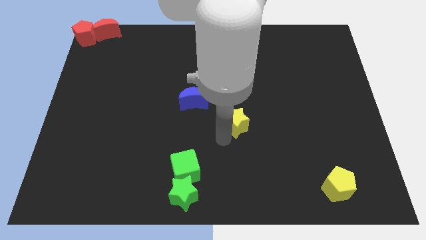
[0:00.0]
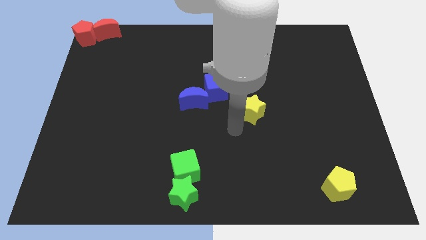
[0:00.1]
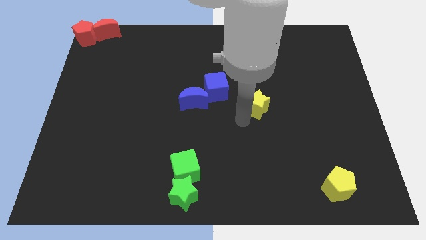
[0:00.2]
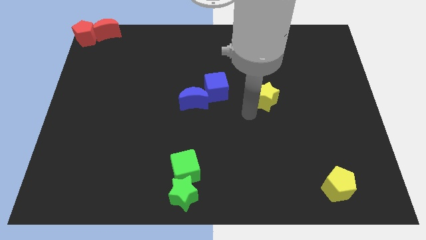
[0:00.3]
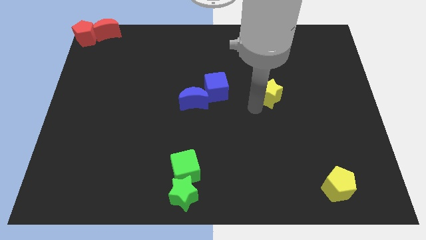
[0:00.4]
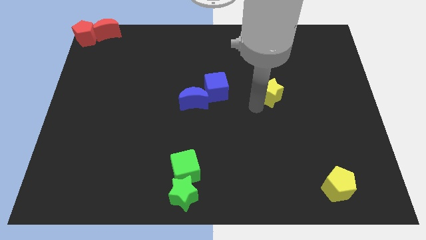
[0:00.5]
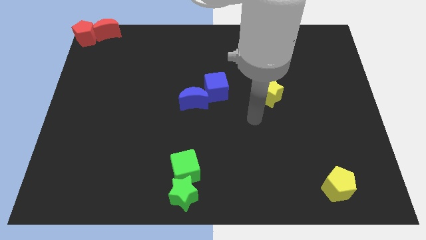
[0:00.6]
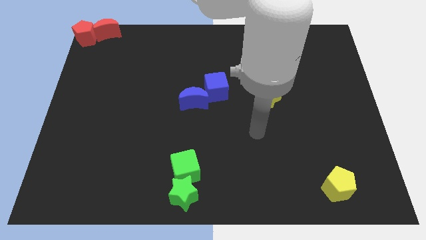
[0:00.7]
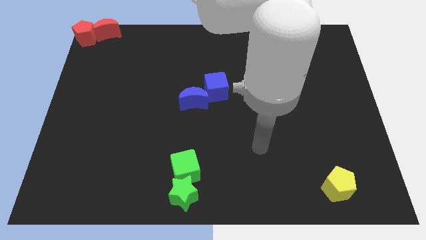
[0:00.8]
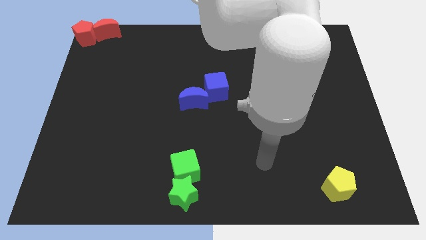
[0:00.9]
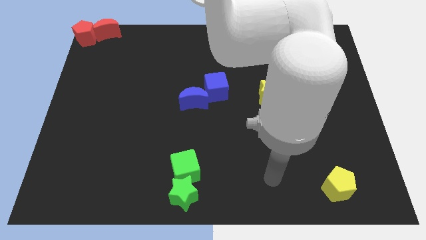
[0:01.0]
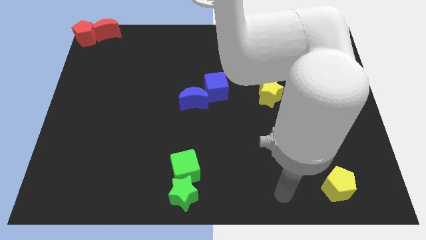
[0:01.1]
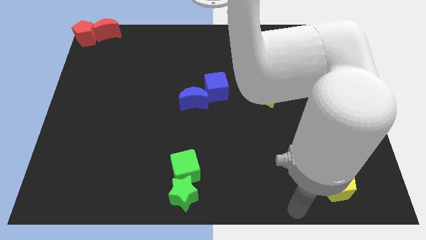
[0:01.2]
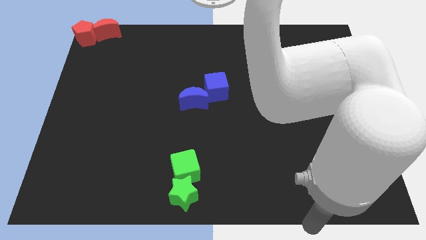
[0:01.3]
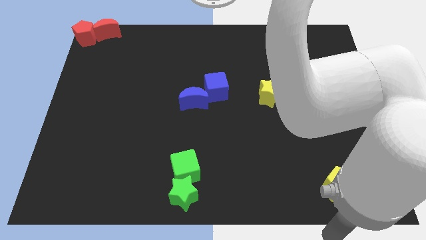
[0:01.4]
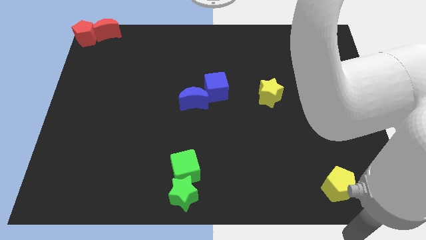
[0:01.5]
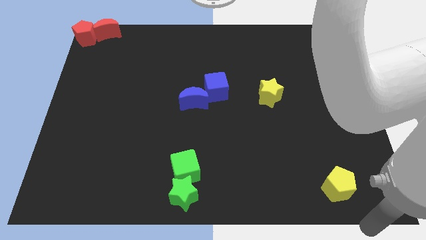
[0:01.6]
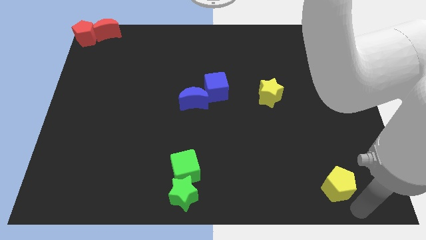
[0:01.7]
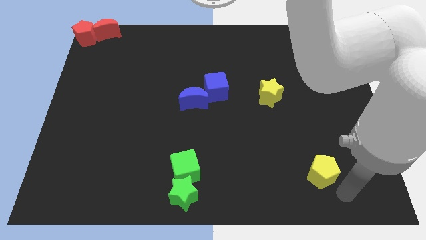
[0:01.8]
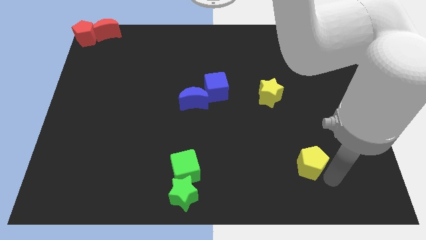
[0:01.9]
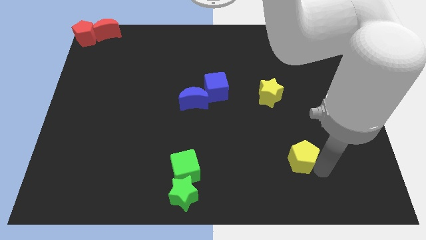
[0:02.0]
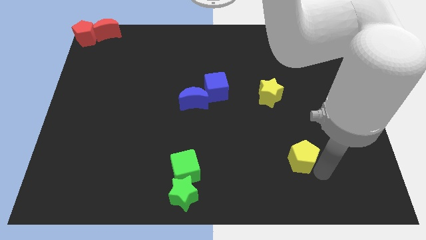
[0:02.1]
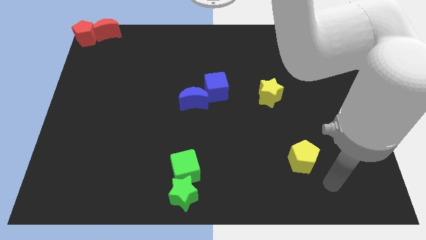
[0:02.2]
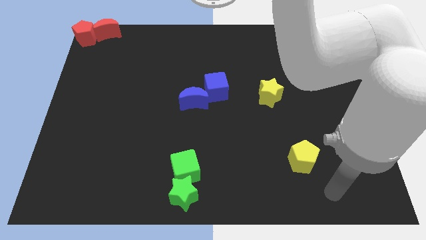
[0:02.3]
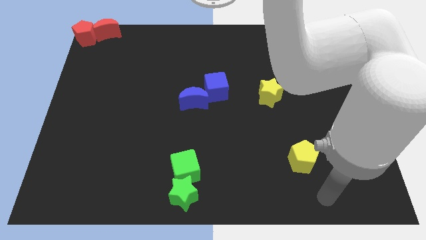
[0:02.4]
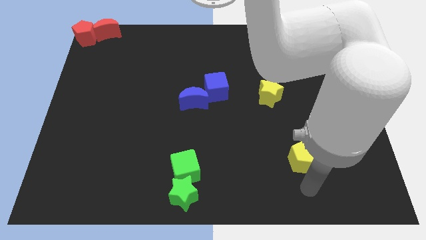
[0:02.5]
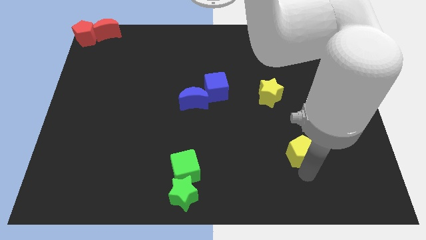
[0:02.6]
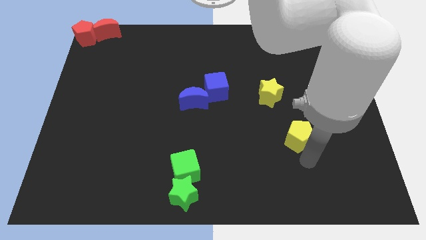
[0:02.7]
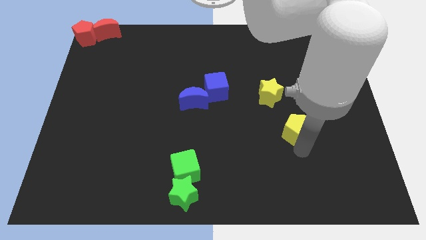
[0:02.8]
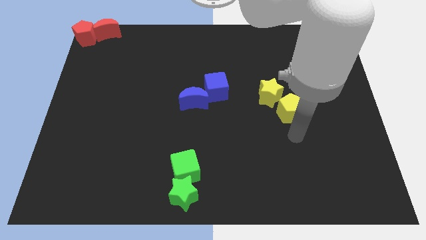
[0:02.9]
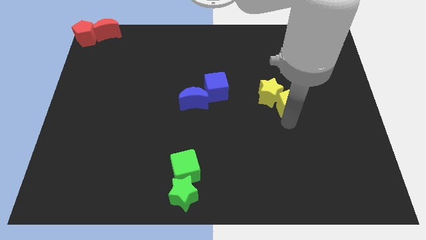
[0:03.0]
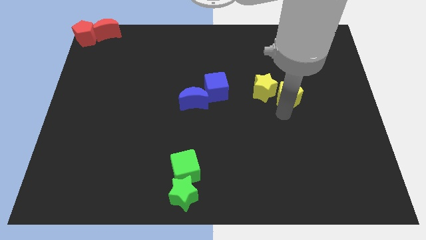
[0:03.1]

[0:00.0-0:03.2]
place the yellow blocks together to the right of blue blocks

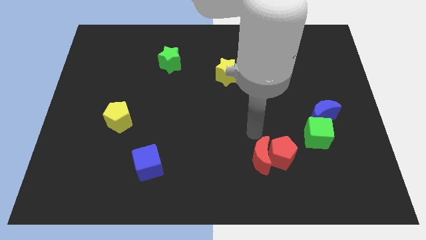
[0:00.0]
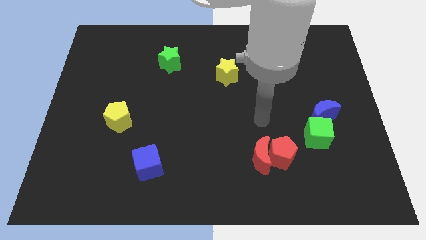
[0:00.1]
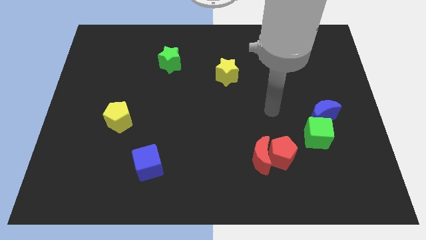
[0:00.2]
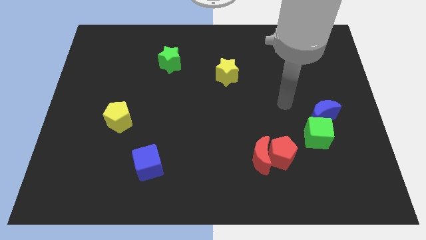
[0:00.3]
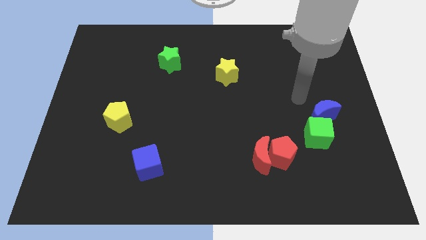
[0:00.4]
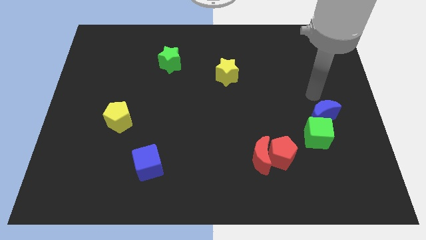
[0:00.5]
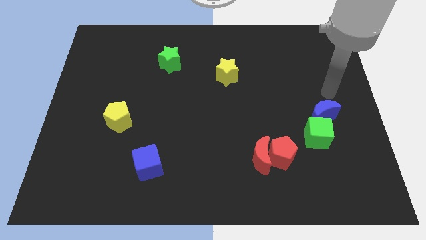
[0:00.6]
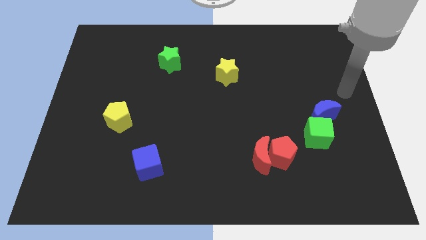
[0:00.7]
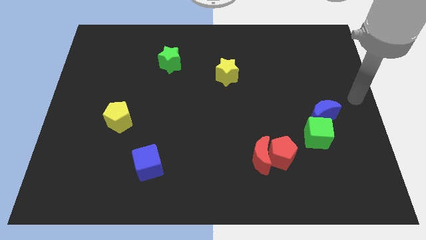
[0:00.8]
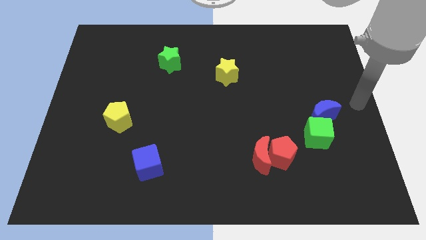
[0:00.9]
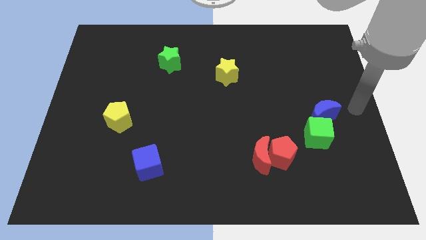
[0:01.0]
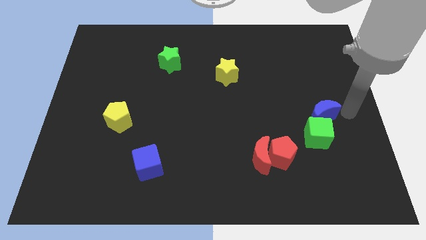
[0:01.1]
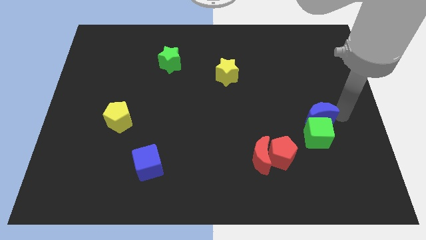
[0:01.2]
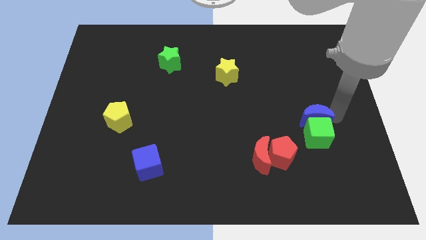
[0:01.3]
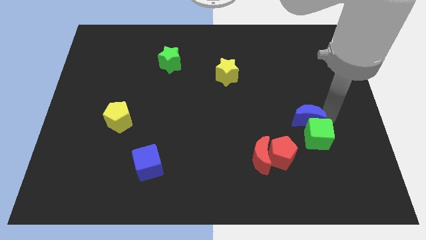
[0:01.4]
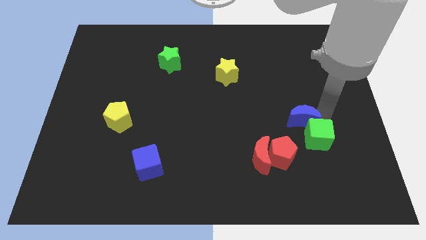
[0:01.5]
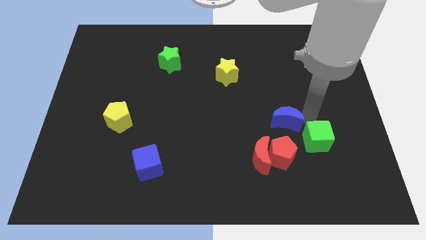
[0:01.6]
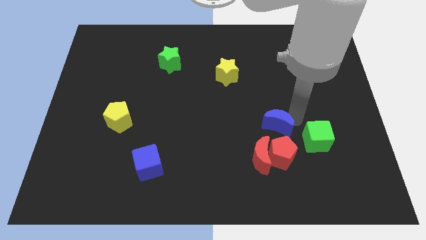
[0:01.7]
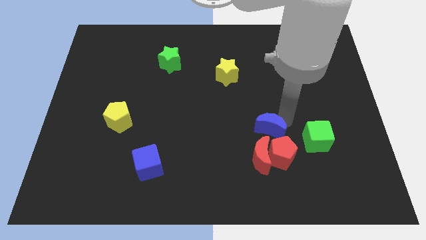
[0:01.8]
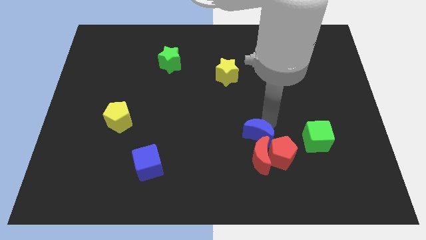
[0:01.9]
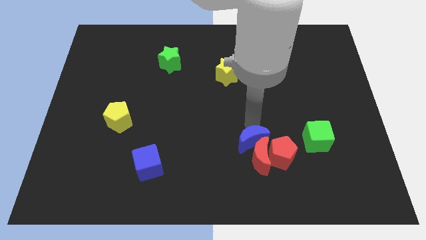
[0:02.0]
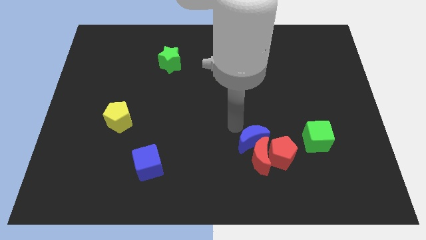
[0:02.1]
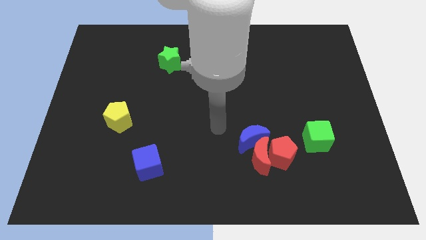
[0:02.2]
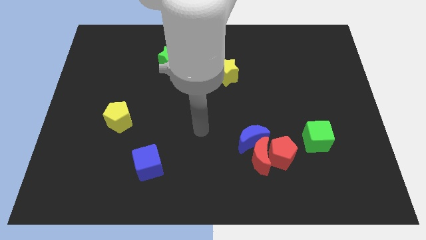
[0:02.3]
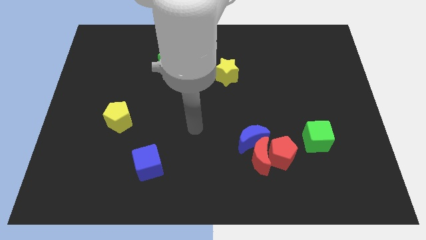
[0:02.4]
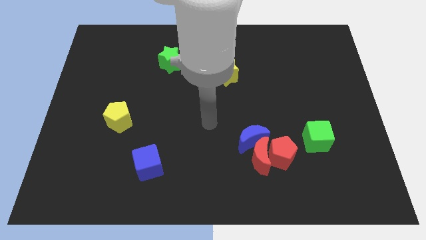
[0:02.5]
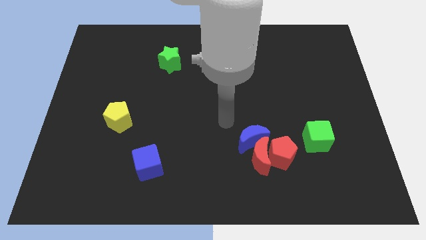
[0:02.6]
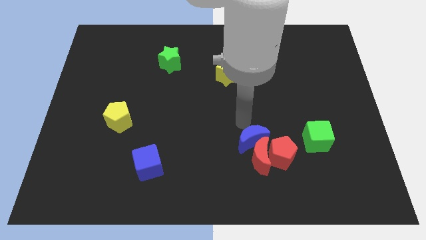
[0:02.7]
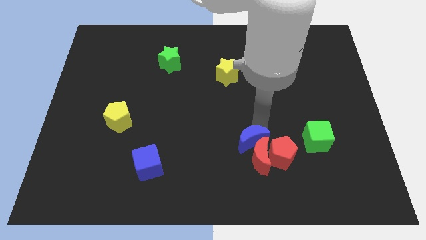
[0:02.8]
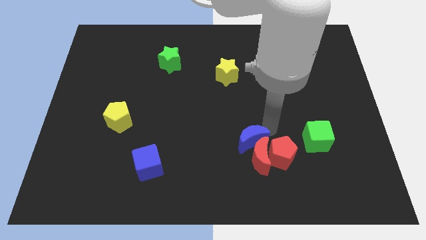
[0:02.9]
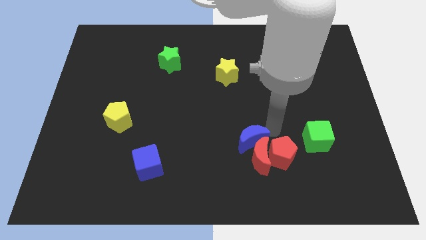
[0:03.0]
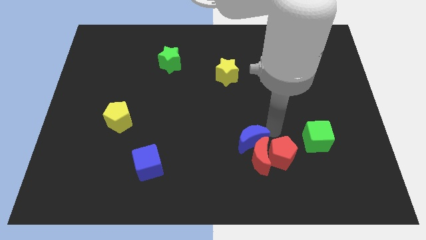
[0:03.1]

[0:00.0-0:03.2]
separate the blue crescent from the green cube

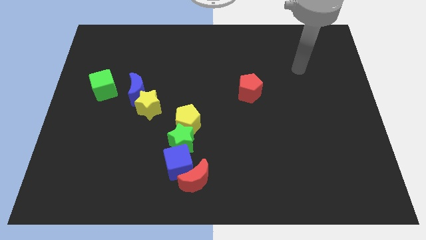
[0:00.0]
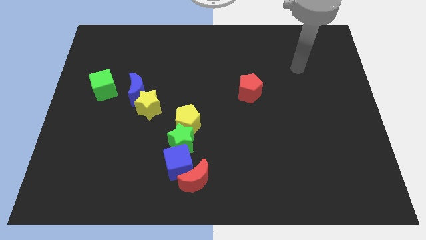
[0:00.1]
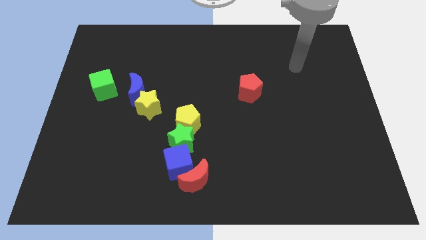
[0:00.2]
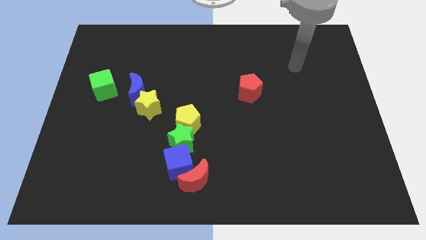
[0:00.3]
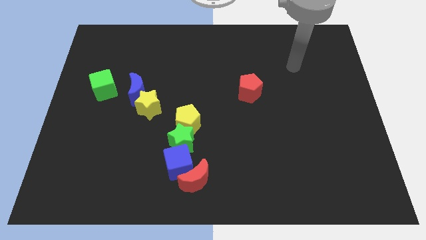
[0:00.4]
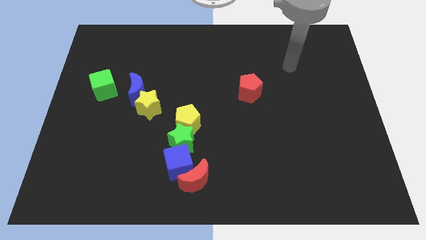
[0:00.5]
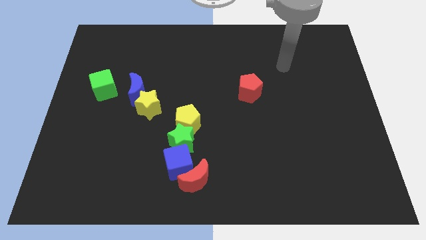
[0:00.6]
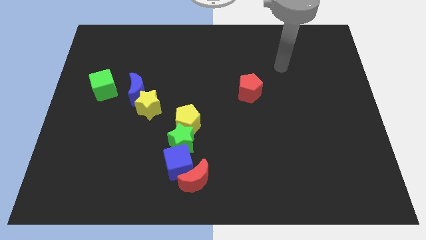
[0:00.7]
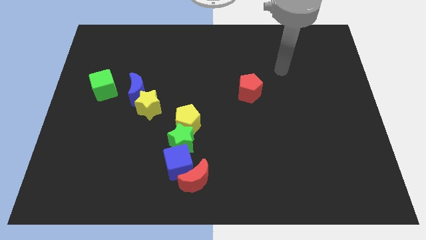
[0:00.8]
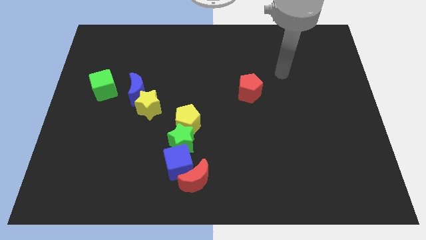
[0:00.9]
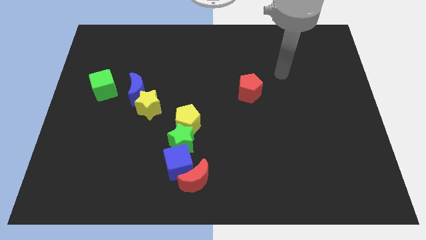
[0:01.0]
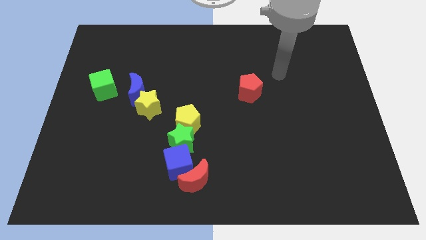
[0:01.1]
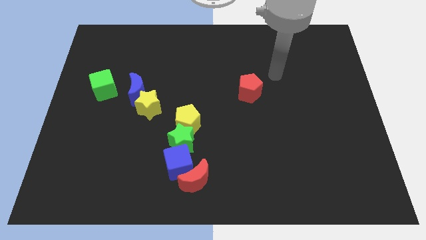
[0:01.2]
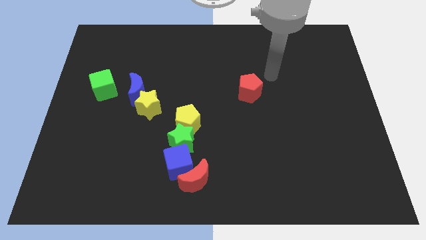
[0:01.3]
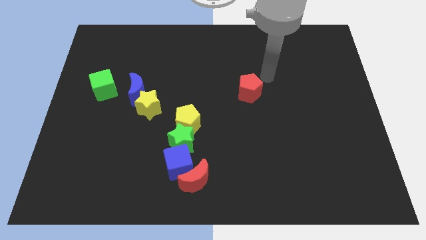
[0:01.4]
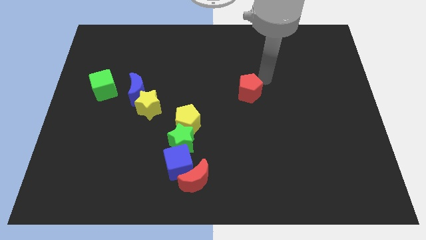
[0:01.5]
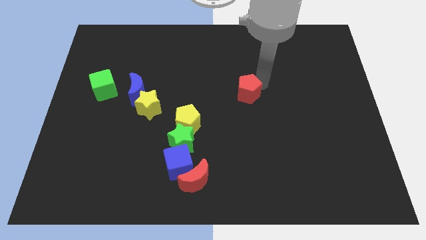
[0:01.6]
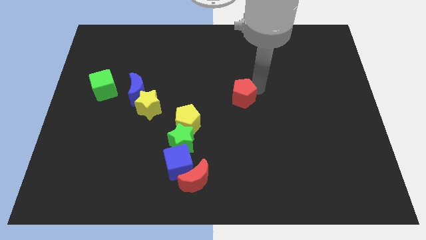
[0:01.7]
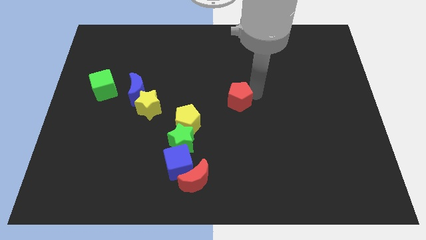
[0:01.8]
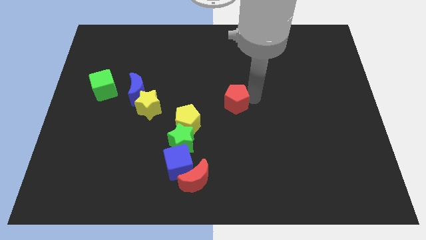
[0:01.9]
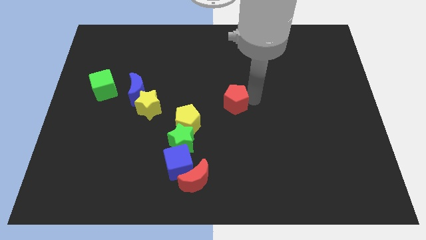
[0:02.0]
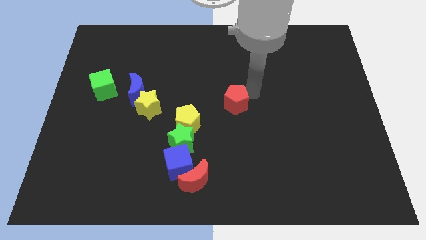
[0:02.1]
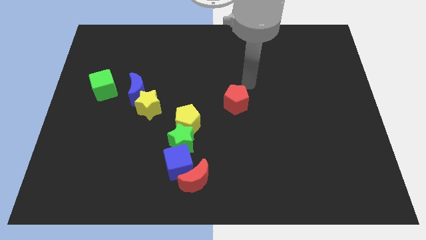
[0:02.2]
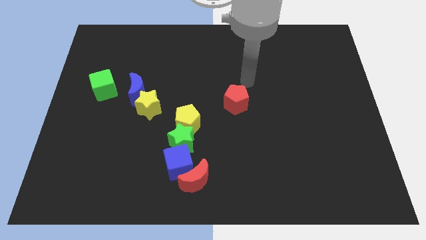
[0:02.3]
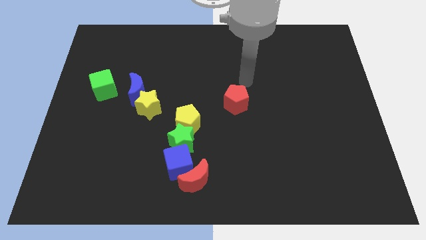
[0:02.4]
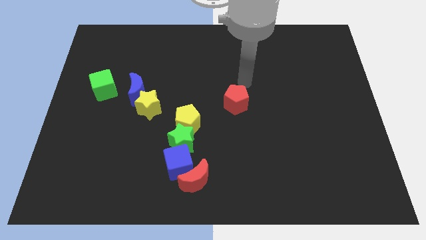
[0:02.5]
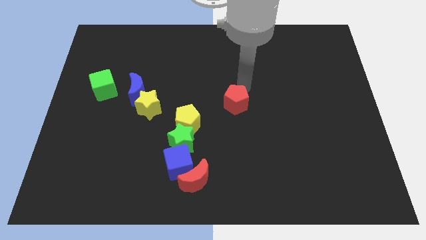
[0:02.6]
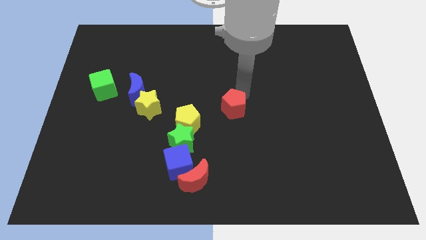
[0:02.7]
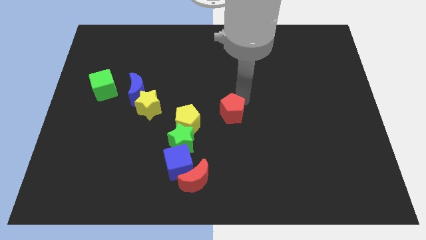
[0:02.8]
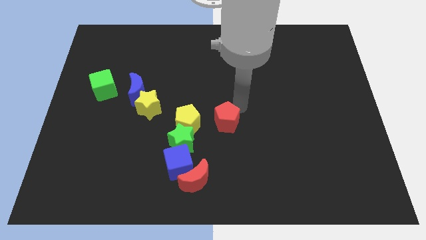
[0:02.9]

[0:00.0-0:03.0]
move red pentagon parallel right to the yellow pentagon
